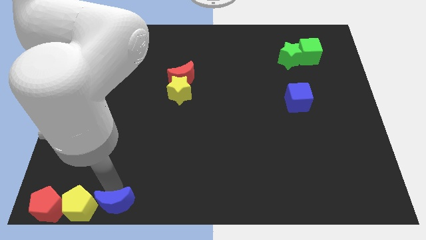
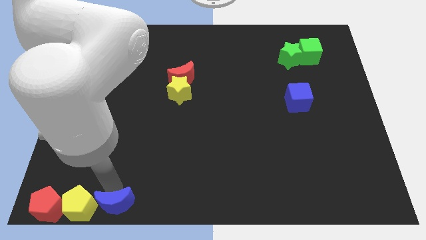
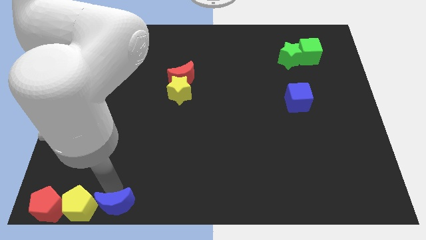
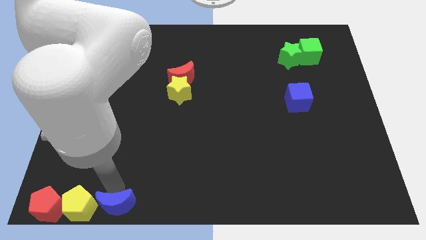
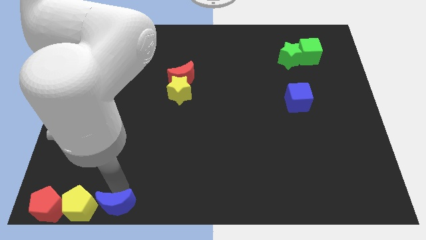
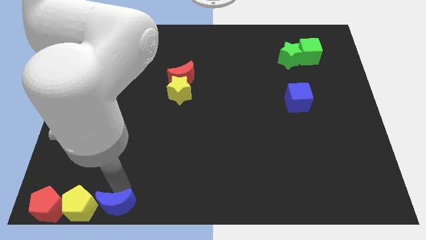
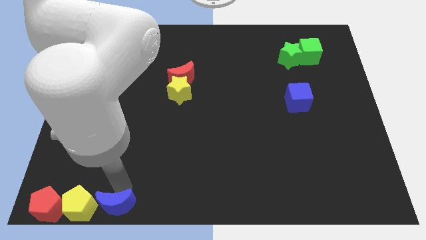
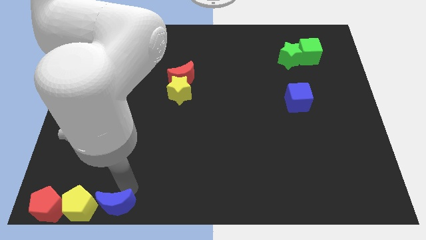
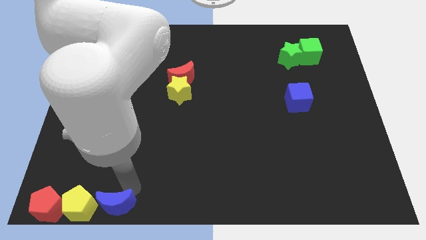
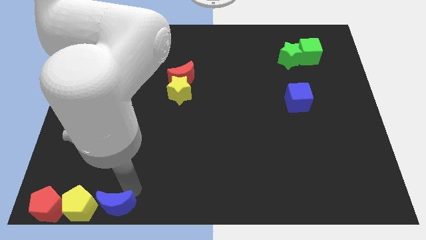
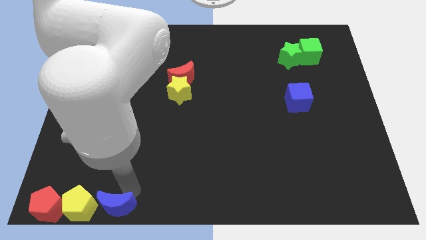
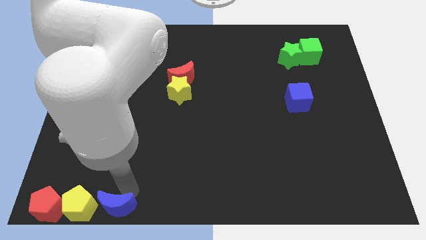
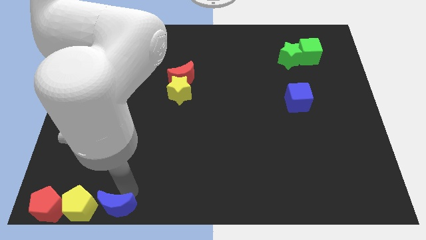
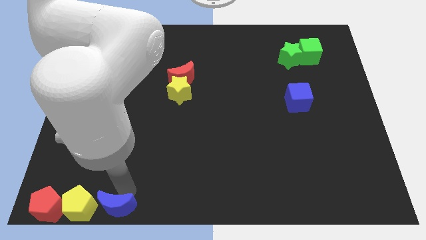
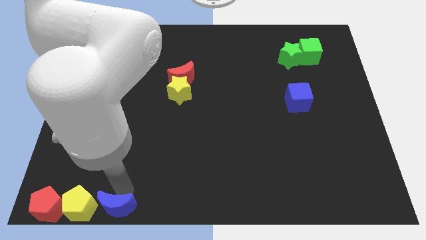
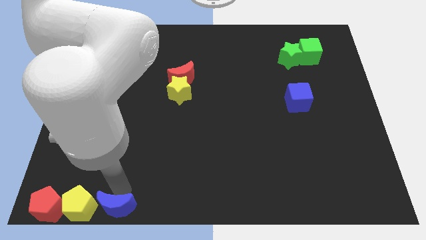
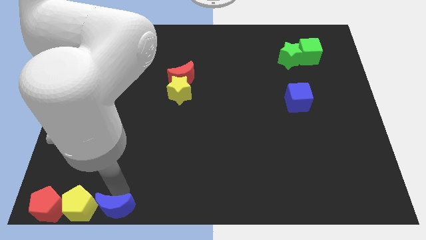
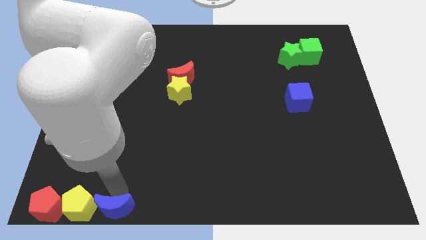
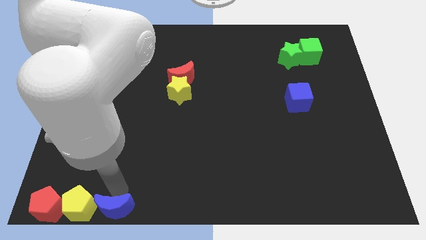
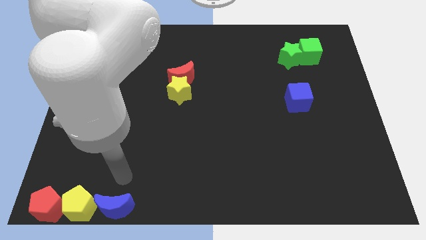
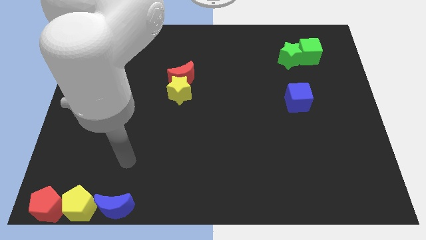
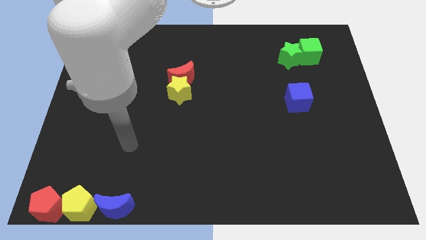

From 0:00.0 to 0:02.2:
move the blue crescent right beside the yellow pentagon

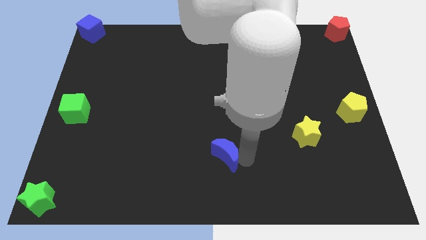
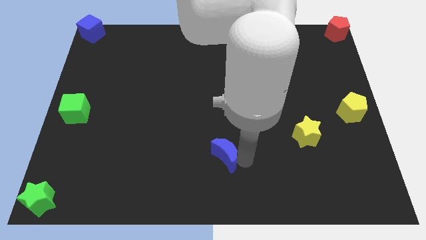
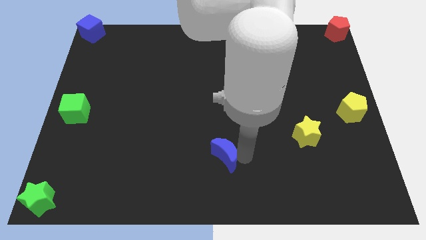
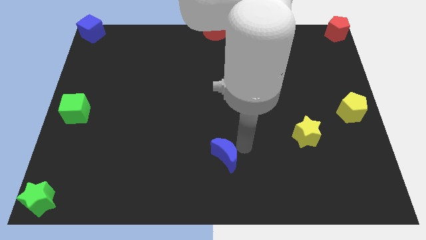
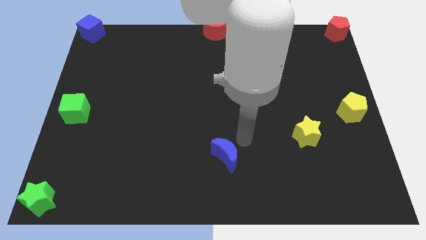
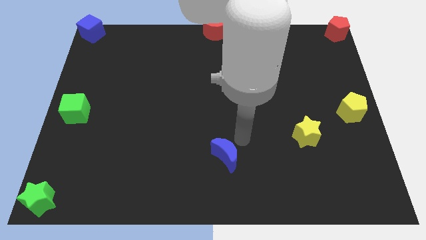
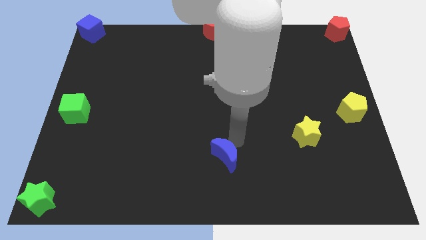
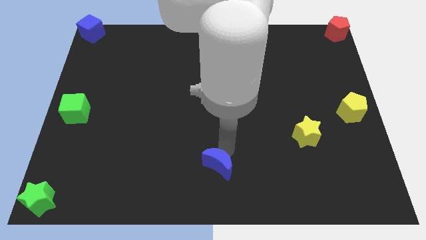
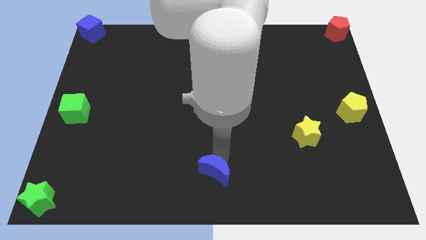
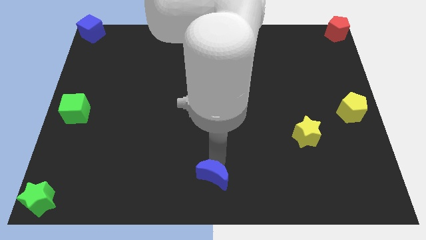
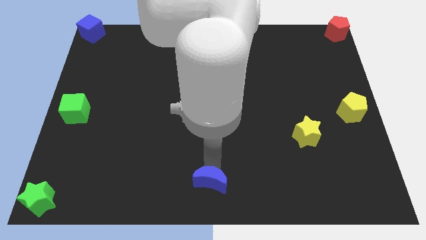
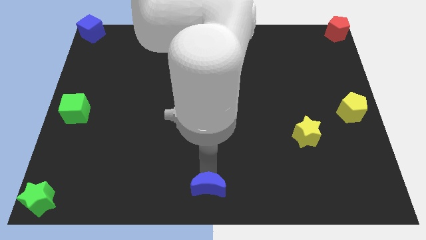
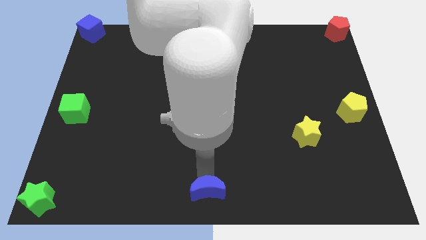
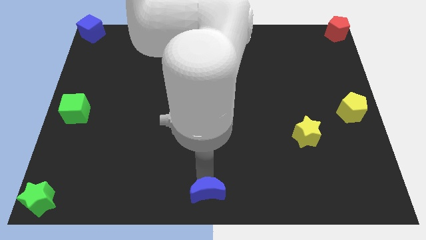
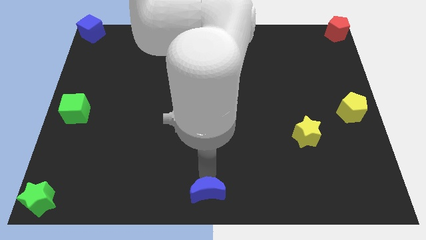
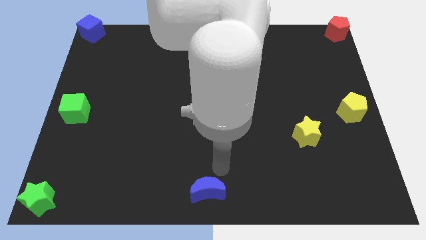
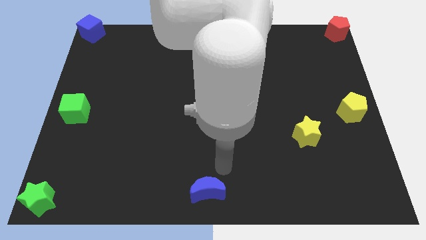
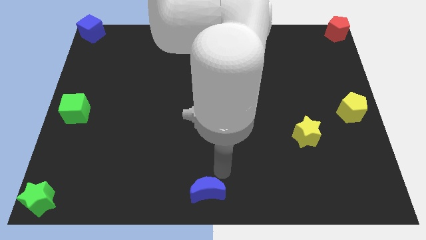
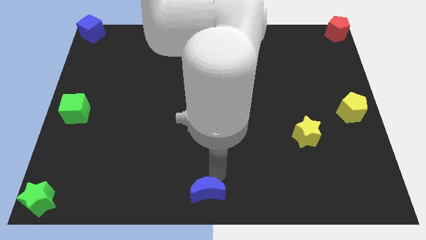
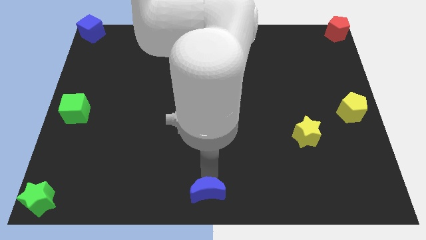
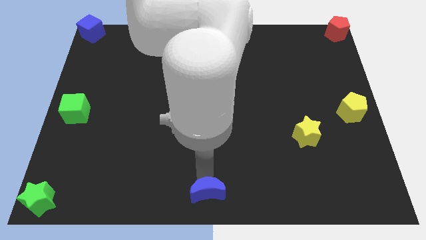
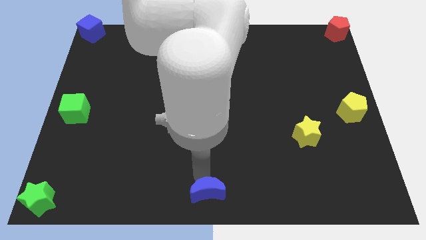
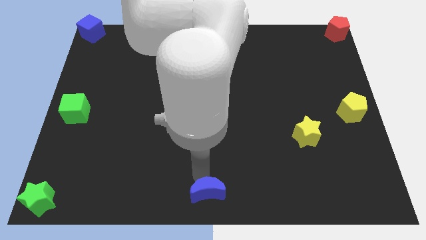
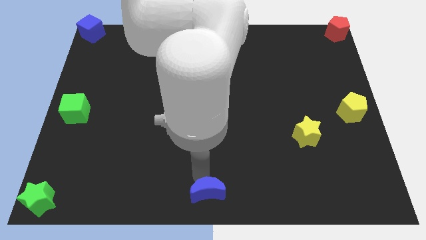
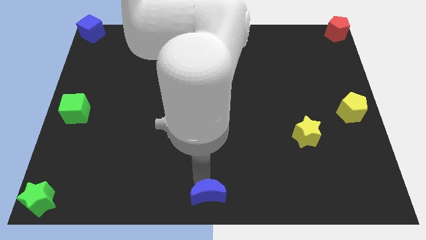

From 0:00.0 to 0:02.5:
move the blue moon to bottom center of the board

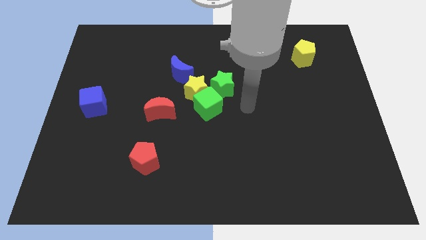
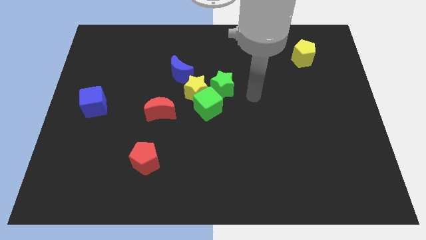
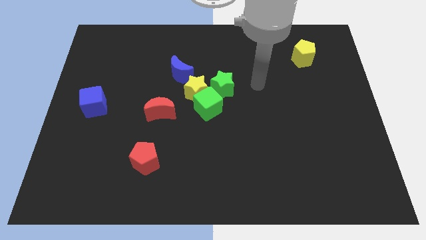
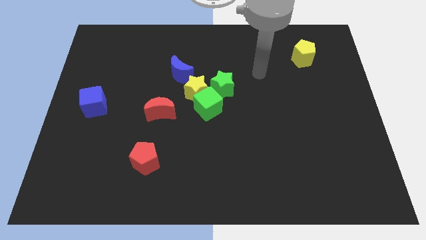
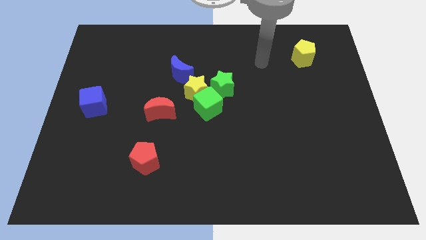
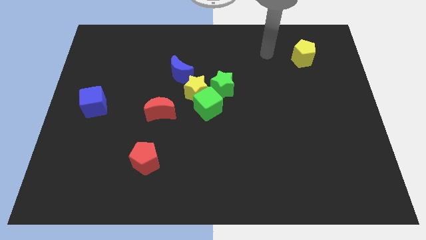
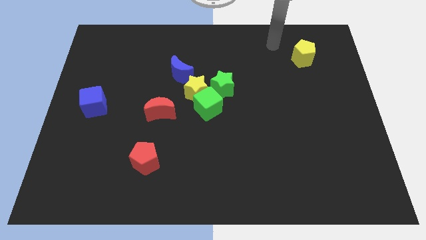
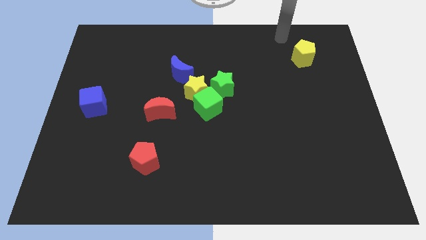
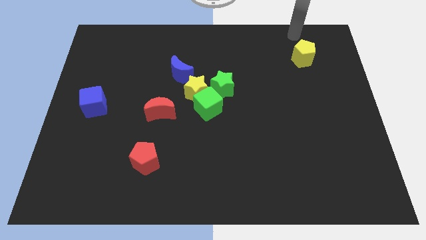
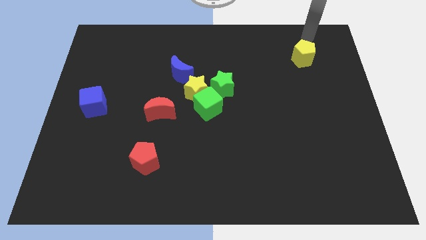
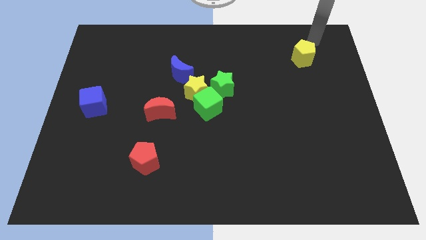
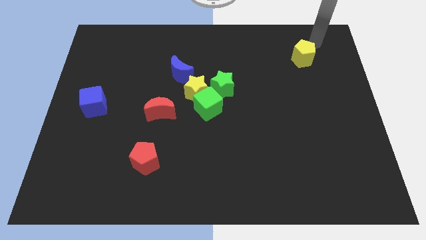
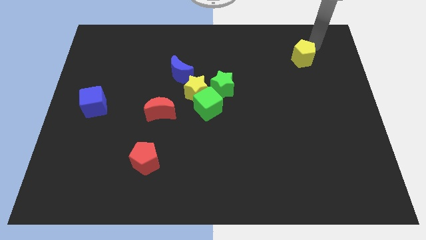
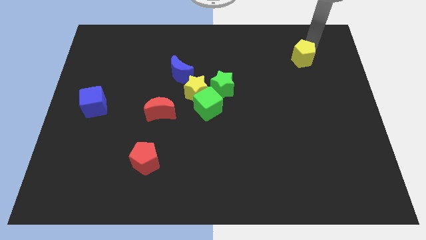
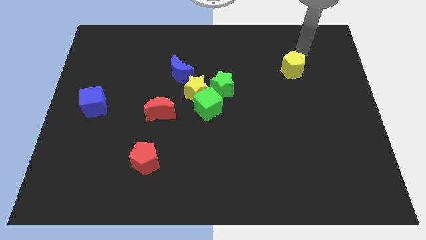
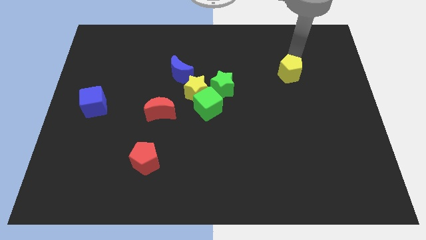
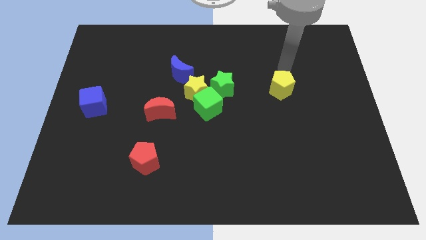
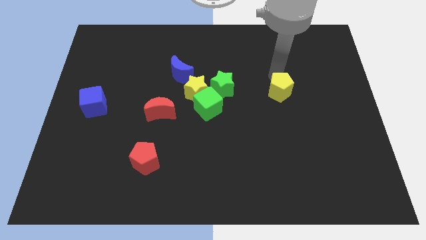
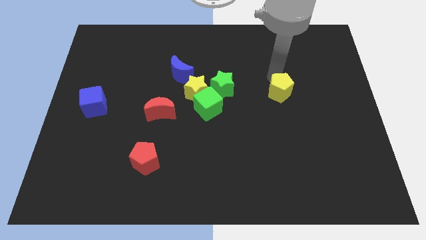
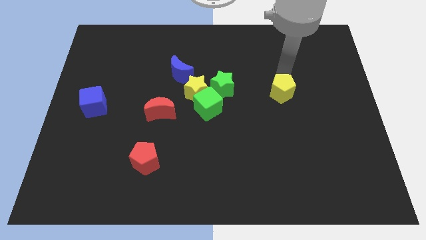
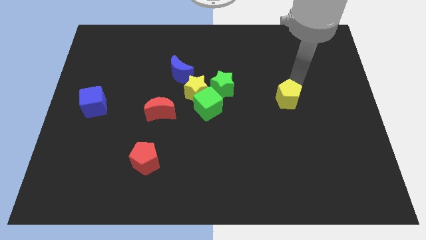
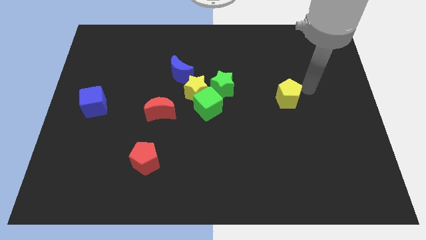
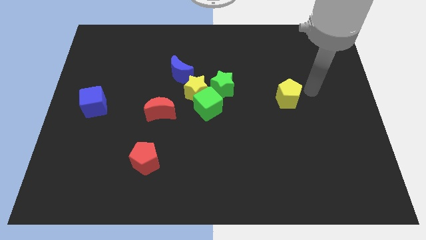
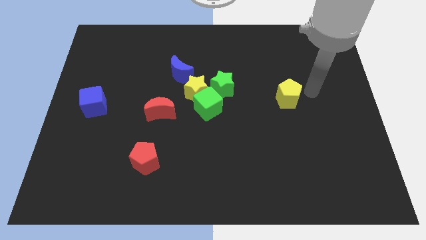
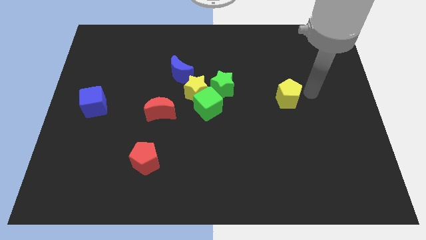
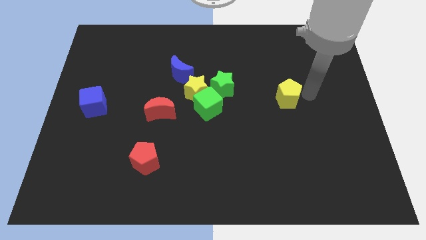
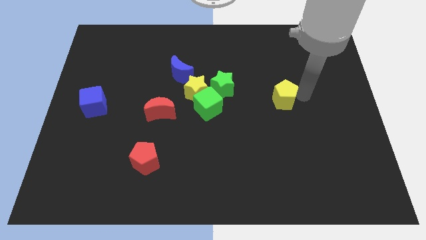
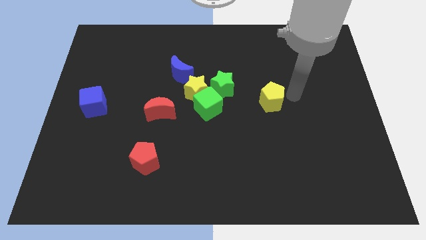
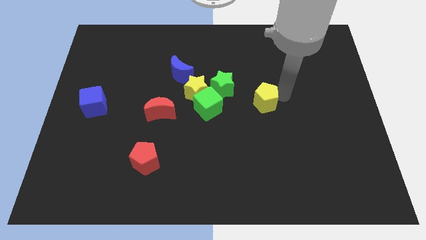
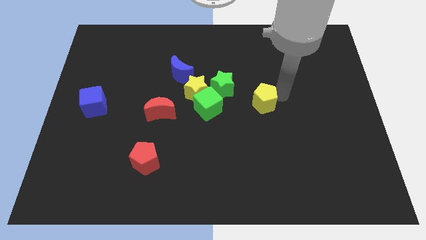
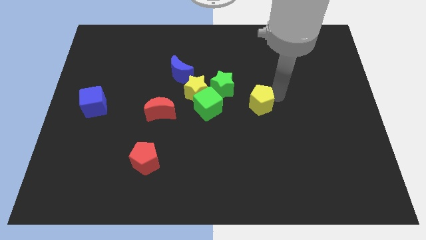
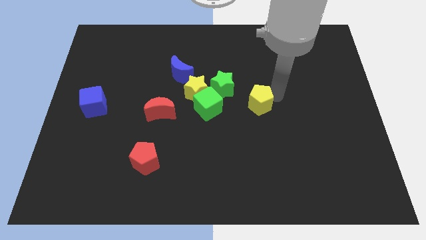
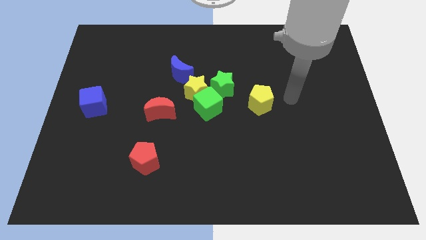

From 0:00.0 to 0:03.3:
move the yellow pentagon towards the green cube

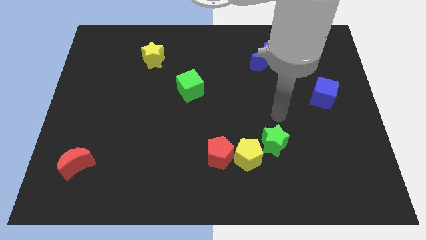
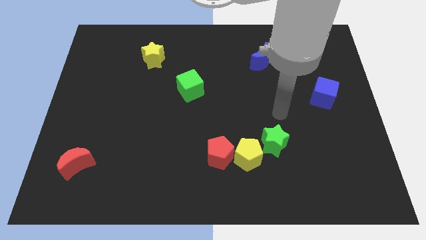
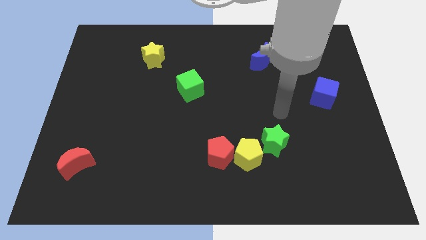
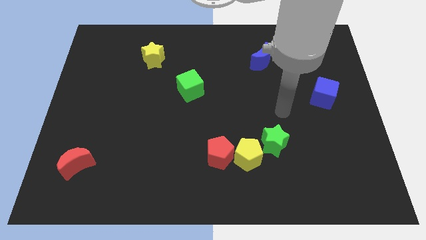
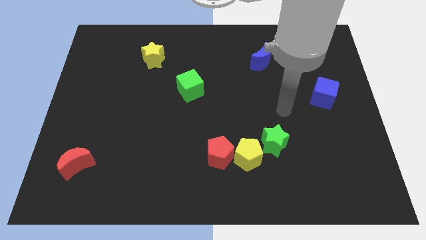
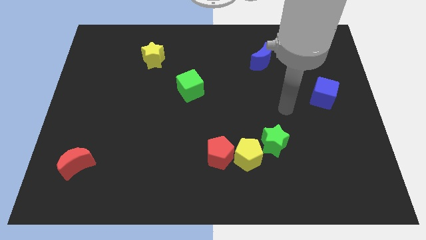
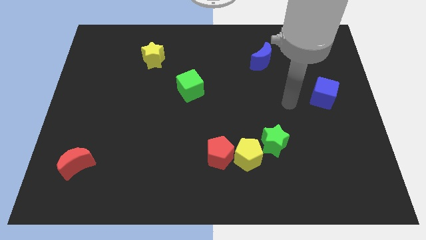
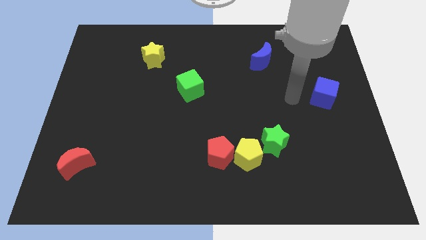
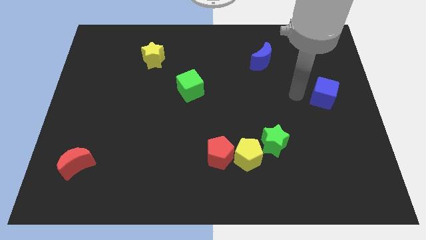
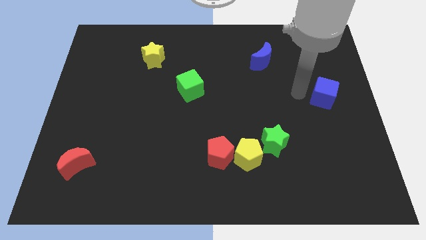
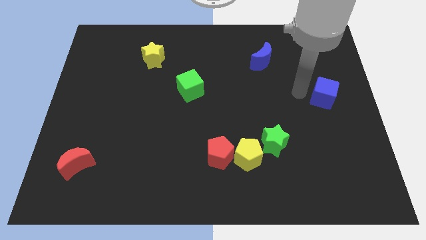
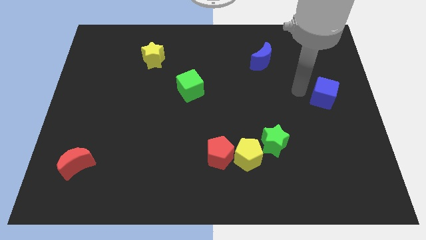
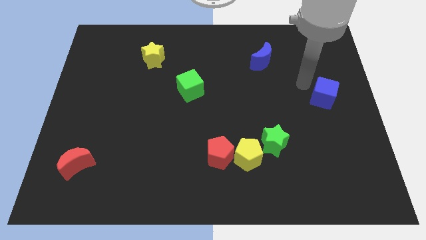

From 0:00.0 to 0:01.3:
move the arm away from the green star
